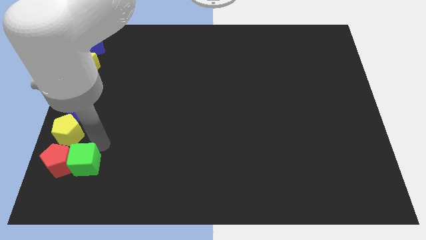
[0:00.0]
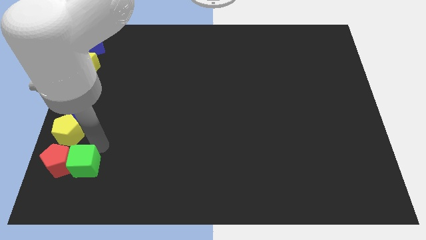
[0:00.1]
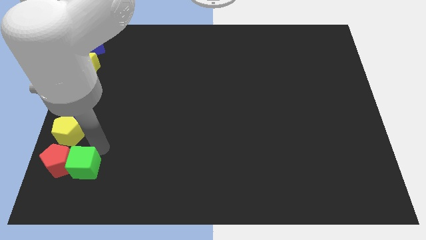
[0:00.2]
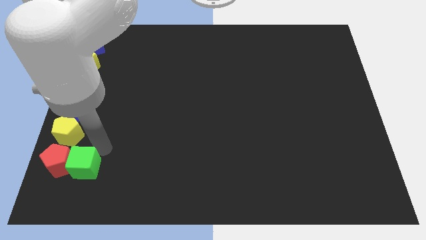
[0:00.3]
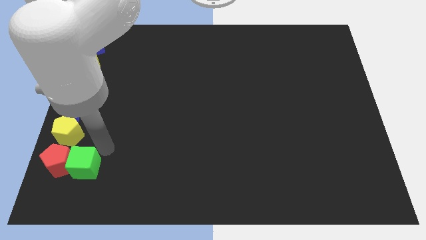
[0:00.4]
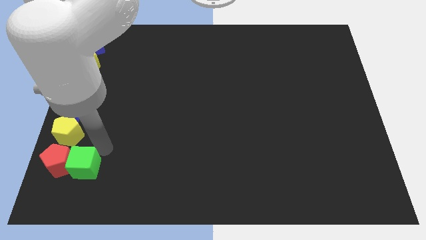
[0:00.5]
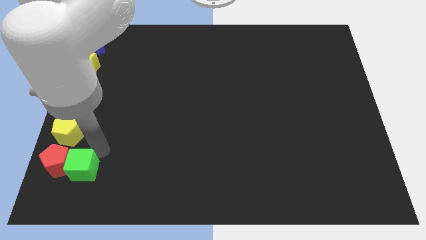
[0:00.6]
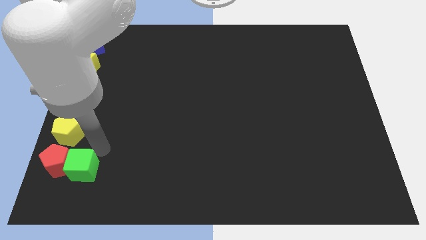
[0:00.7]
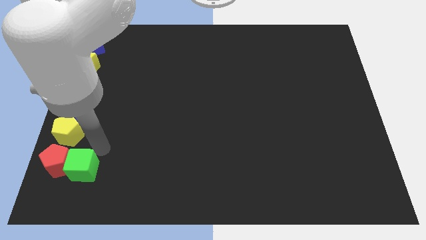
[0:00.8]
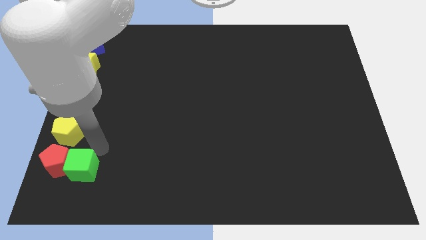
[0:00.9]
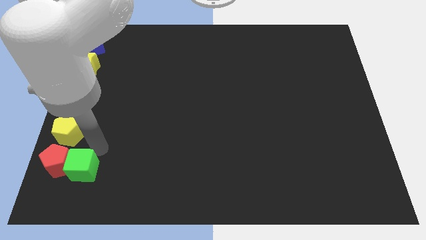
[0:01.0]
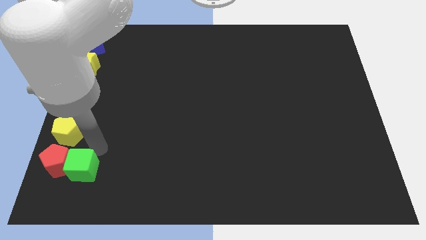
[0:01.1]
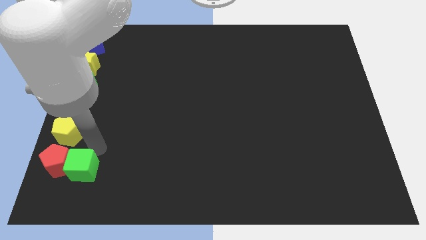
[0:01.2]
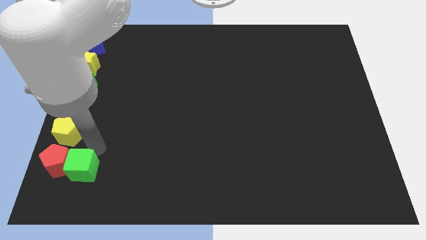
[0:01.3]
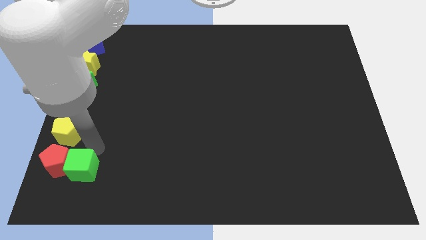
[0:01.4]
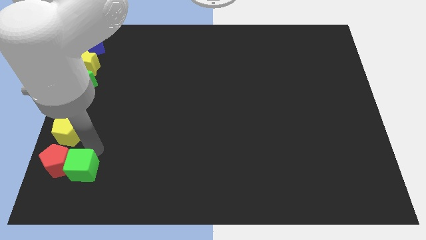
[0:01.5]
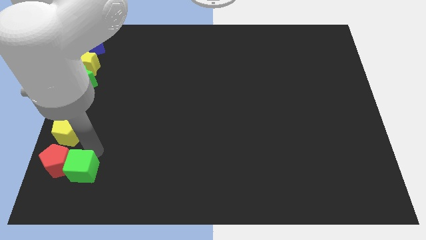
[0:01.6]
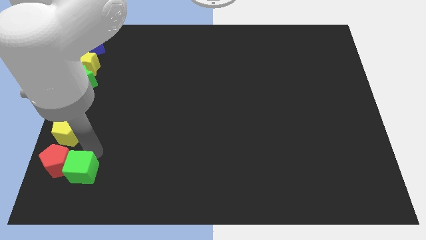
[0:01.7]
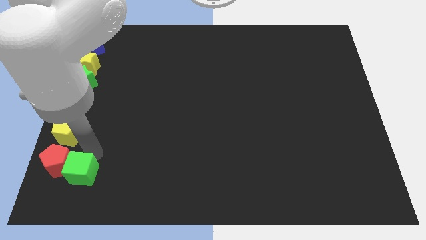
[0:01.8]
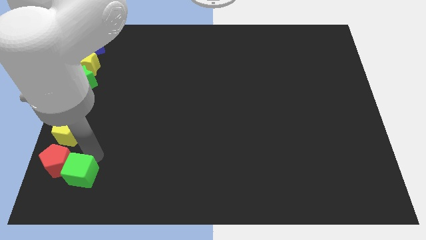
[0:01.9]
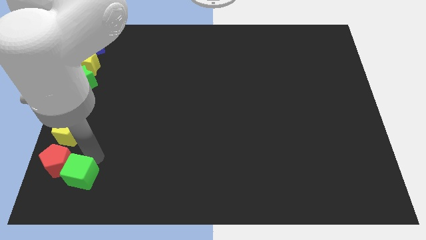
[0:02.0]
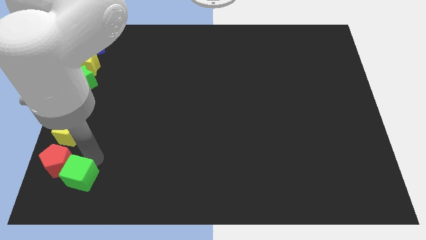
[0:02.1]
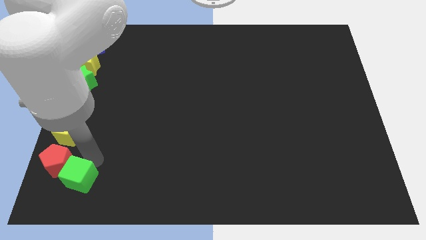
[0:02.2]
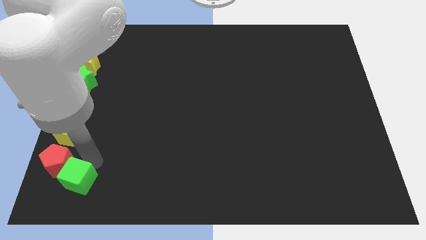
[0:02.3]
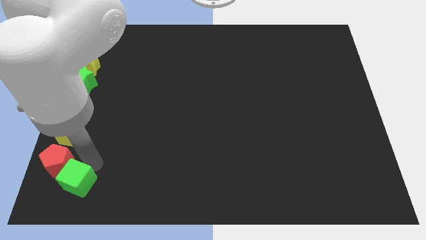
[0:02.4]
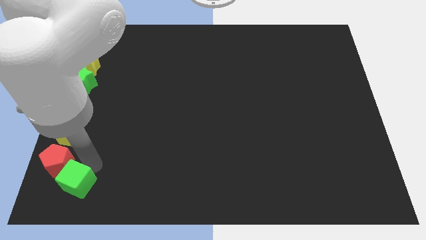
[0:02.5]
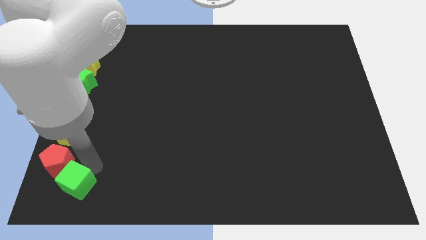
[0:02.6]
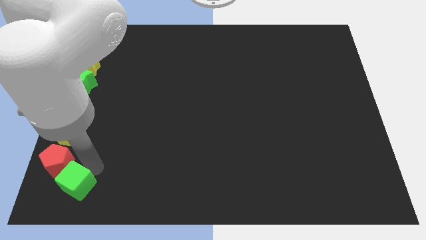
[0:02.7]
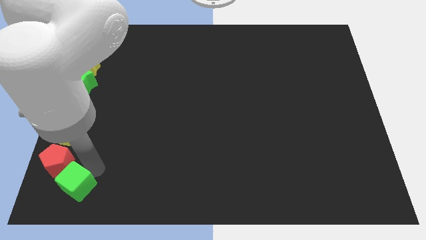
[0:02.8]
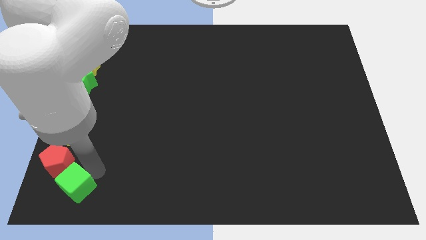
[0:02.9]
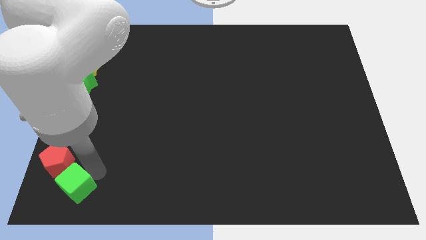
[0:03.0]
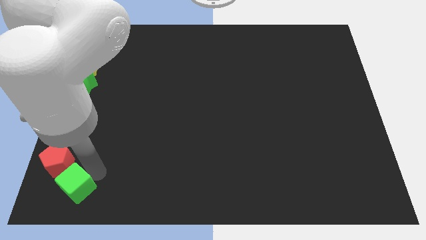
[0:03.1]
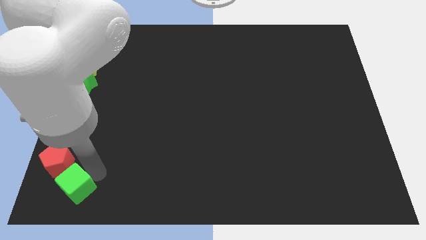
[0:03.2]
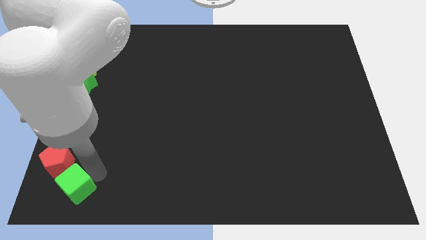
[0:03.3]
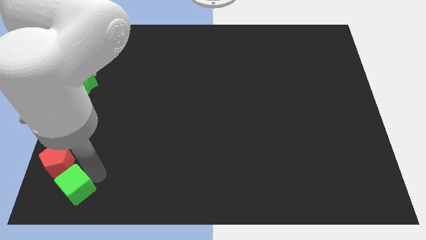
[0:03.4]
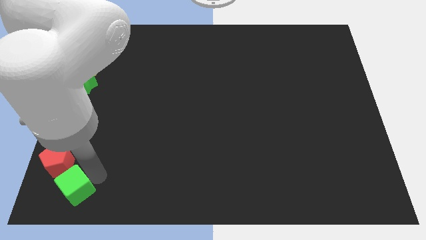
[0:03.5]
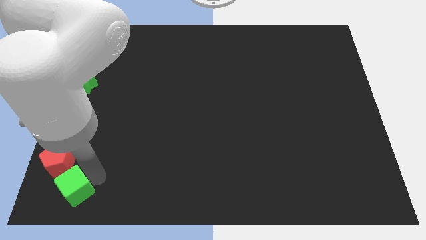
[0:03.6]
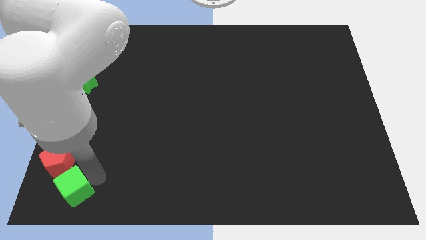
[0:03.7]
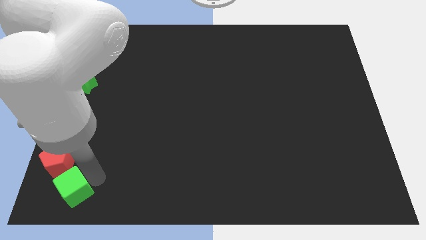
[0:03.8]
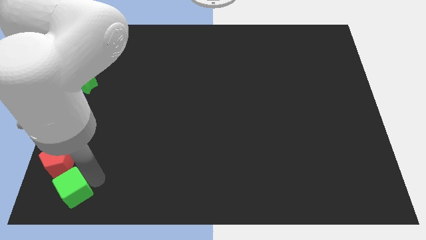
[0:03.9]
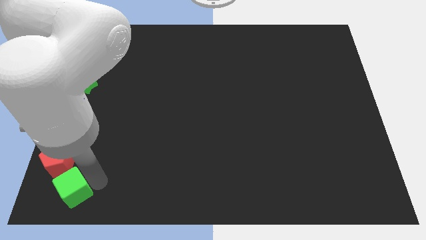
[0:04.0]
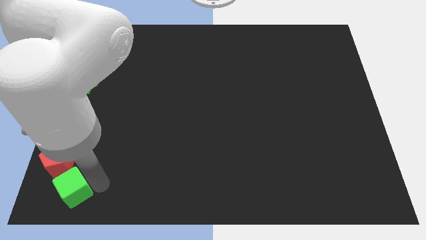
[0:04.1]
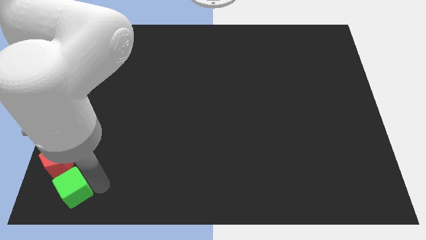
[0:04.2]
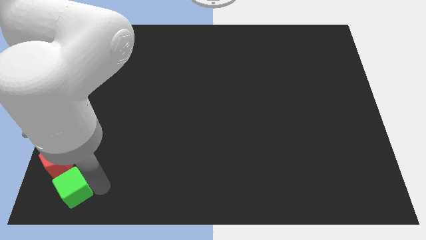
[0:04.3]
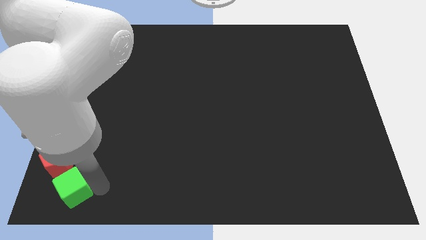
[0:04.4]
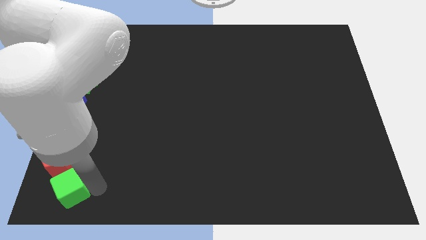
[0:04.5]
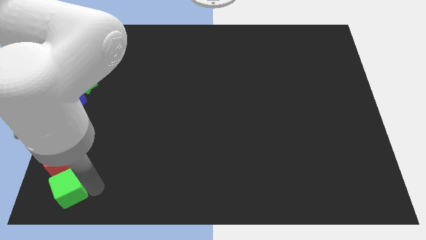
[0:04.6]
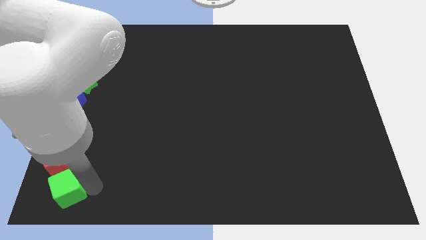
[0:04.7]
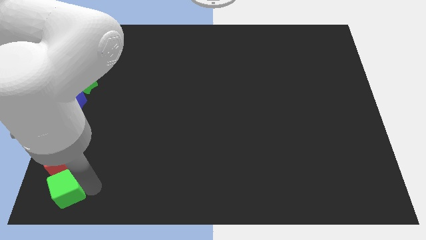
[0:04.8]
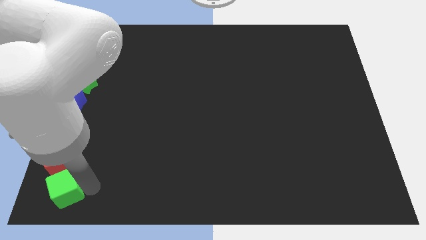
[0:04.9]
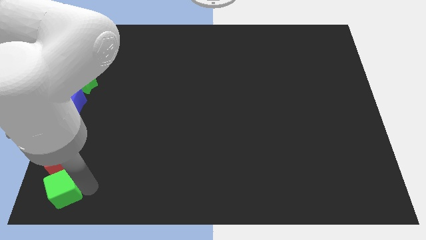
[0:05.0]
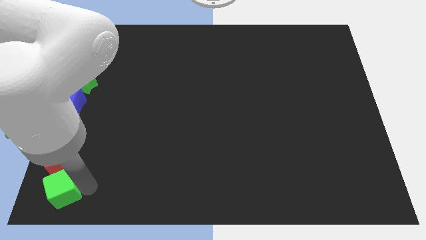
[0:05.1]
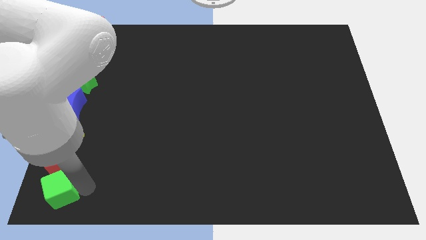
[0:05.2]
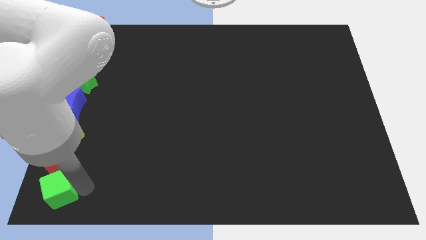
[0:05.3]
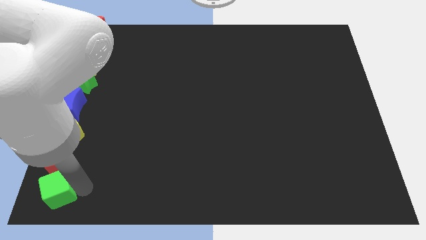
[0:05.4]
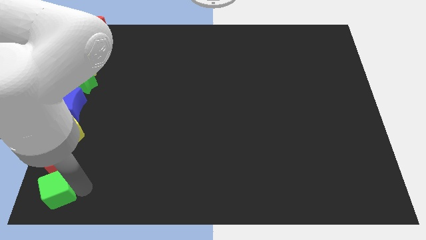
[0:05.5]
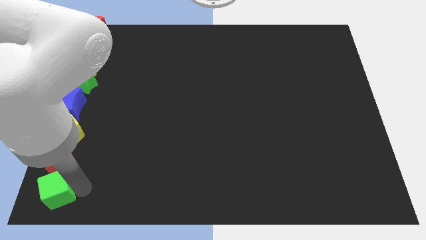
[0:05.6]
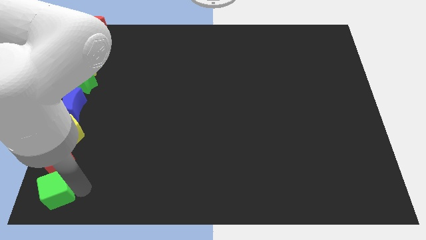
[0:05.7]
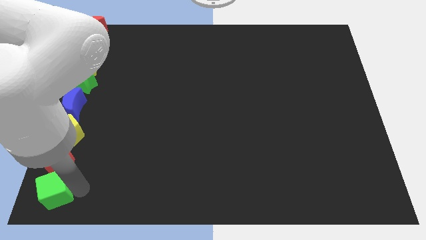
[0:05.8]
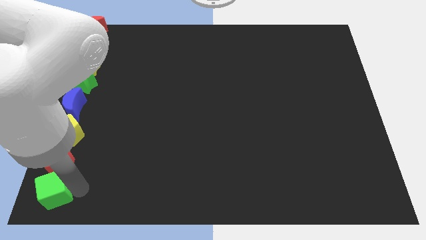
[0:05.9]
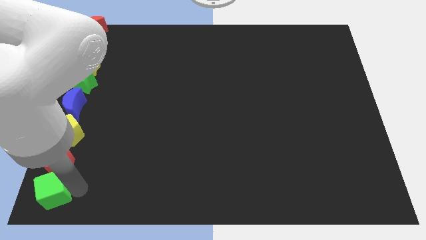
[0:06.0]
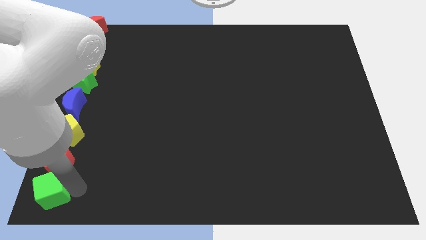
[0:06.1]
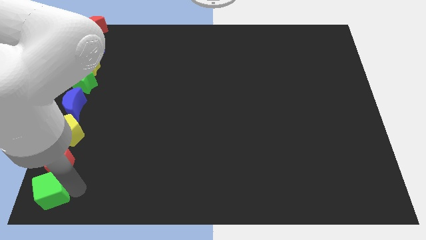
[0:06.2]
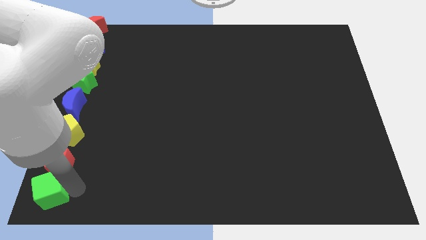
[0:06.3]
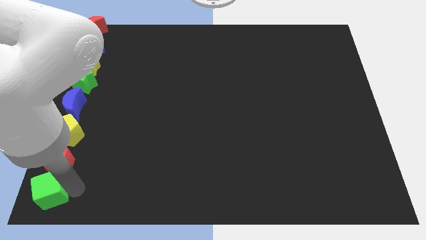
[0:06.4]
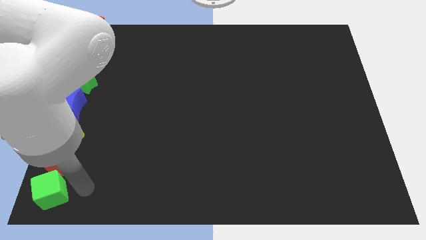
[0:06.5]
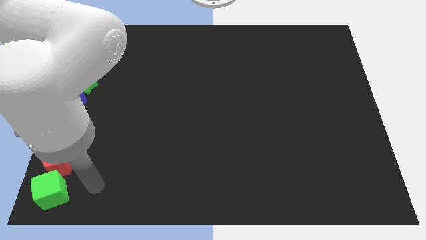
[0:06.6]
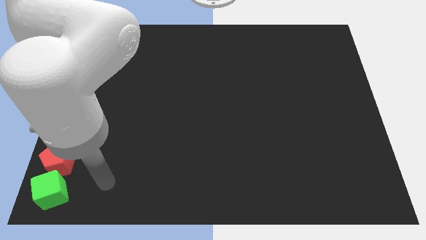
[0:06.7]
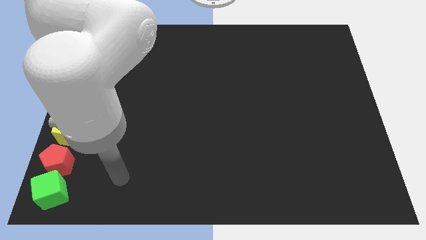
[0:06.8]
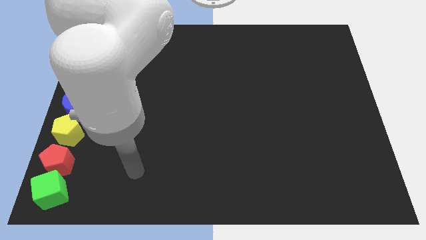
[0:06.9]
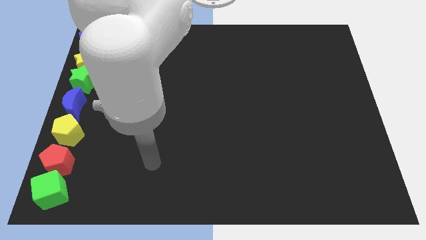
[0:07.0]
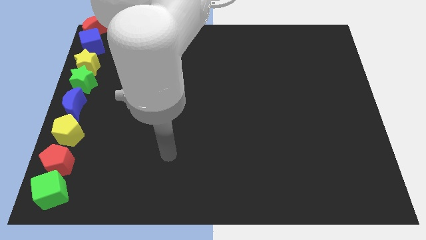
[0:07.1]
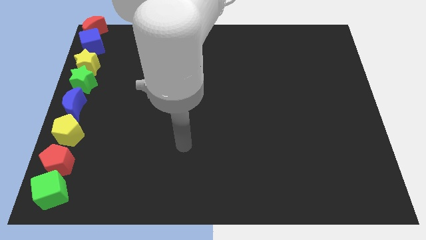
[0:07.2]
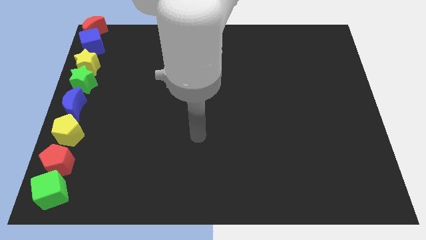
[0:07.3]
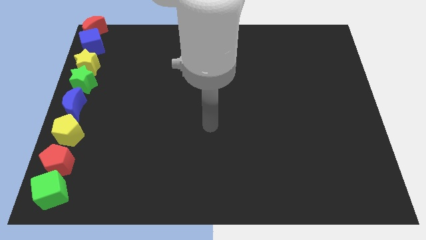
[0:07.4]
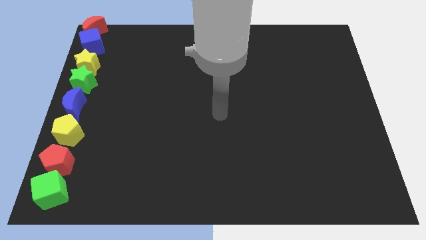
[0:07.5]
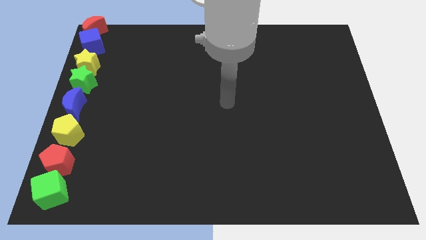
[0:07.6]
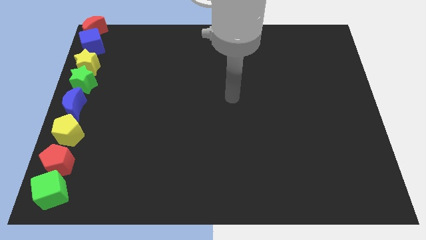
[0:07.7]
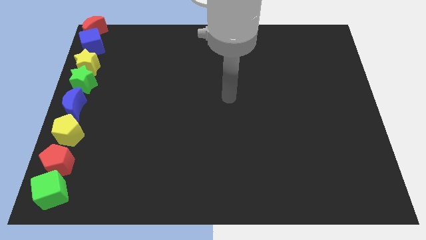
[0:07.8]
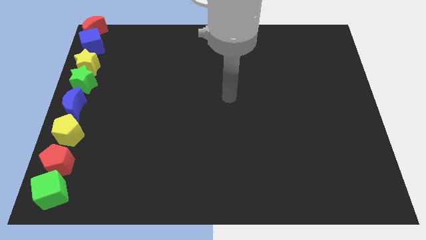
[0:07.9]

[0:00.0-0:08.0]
push the green cube to the bottom of the red pentagon at the bottom left corner

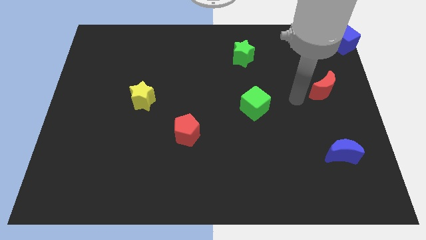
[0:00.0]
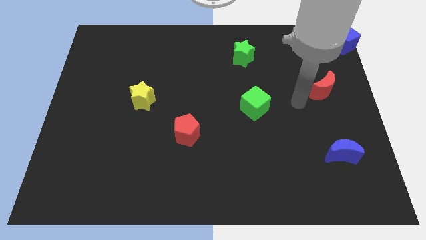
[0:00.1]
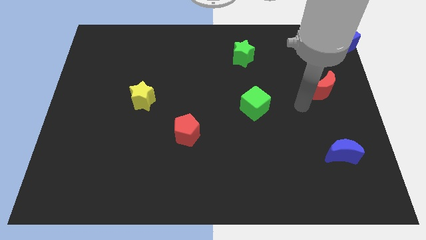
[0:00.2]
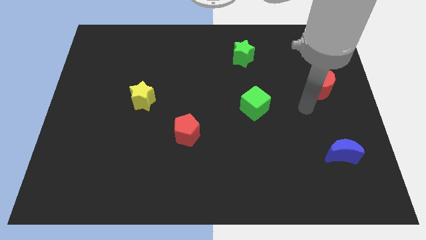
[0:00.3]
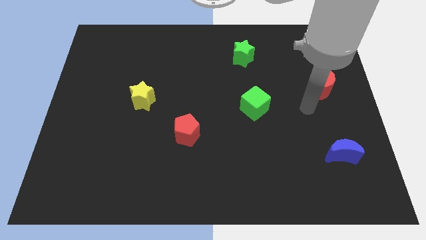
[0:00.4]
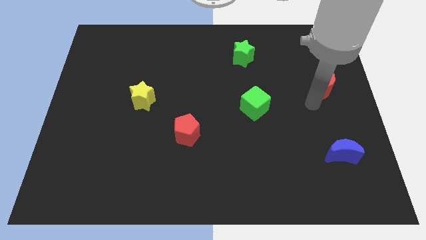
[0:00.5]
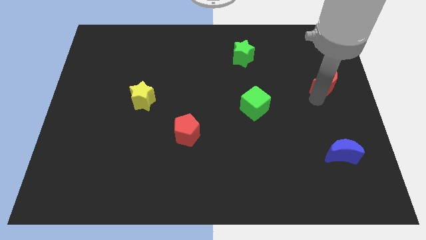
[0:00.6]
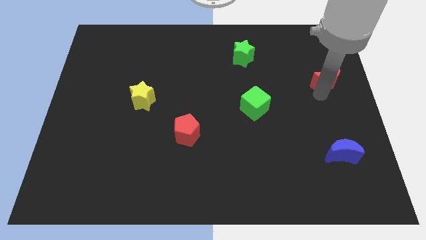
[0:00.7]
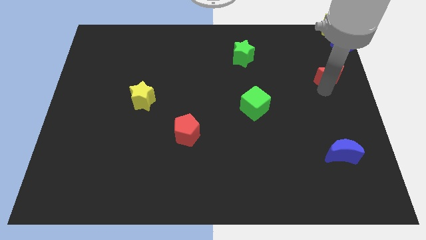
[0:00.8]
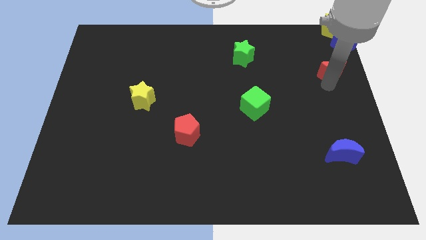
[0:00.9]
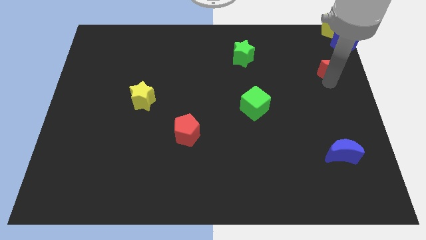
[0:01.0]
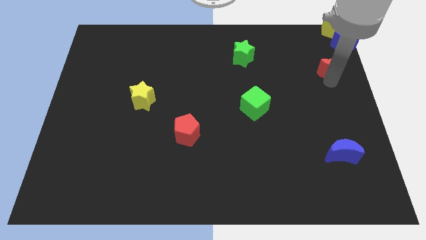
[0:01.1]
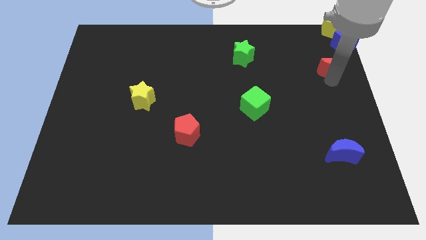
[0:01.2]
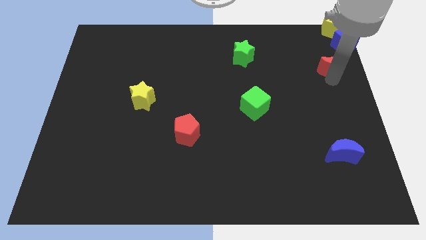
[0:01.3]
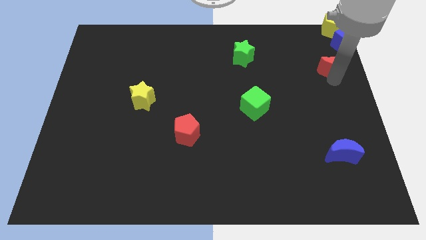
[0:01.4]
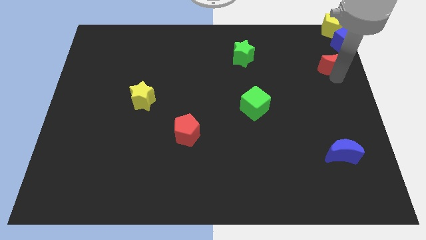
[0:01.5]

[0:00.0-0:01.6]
push the red crescent towards the blue cube
